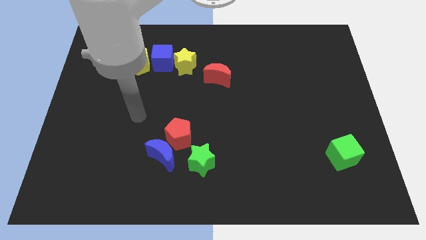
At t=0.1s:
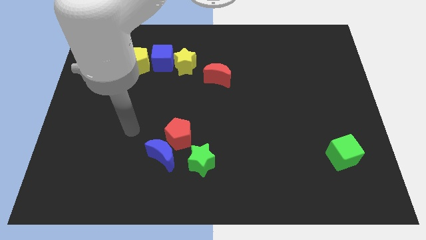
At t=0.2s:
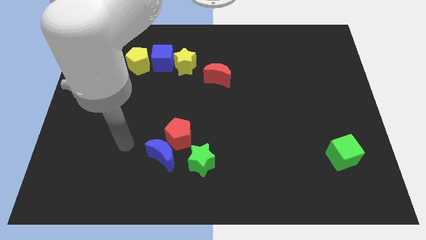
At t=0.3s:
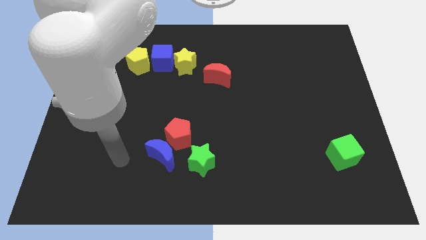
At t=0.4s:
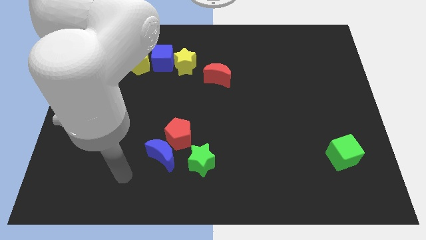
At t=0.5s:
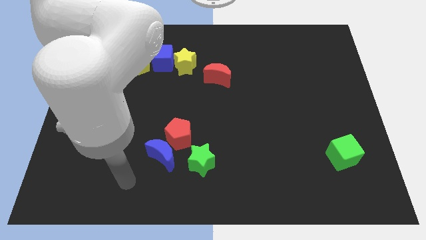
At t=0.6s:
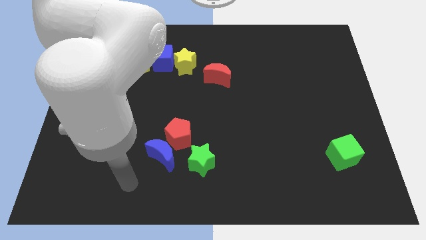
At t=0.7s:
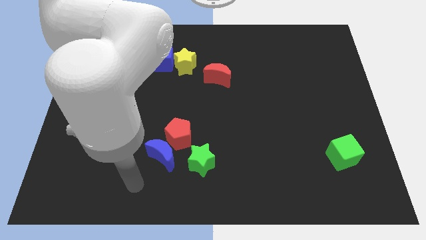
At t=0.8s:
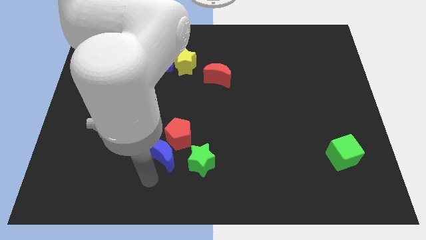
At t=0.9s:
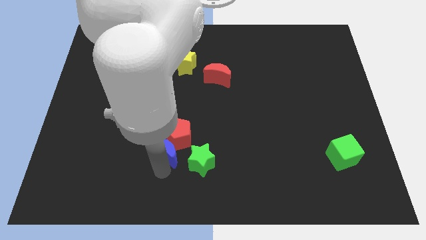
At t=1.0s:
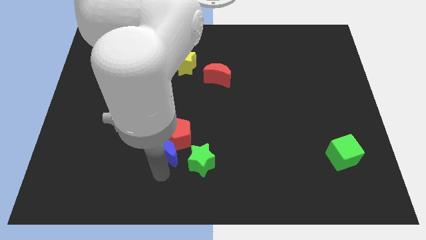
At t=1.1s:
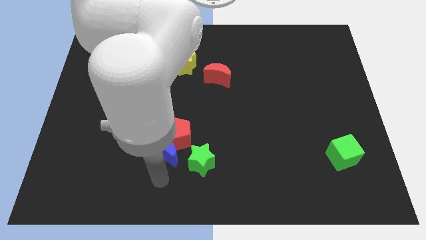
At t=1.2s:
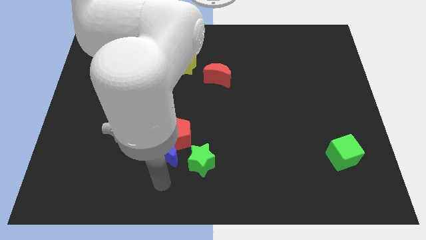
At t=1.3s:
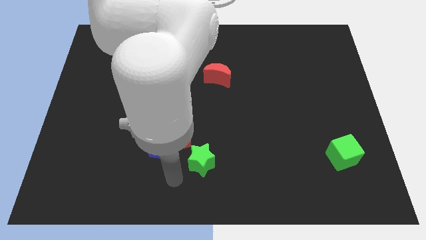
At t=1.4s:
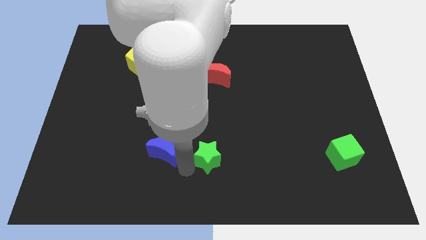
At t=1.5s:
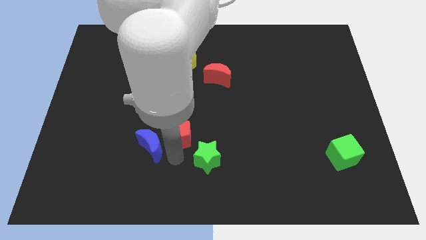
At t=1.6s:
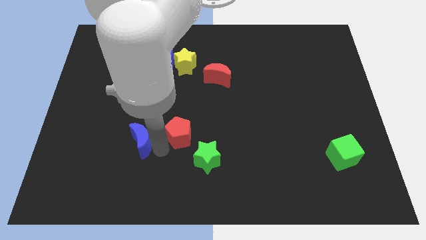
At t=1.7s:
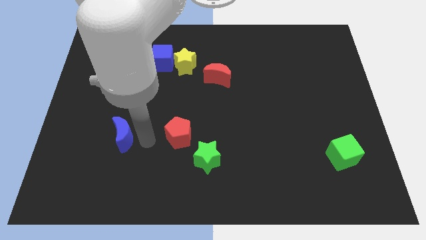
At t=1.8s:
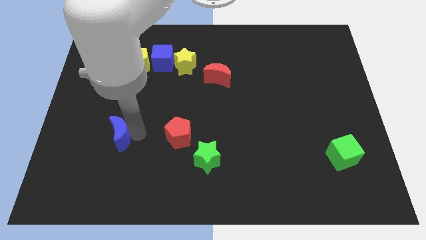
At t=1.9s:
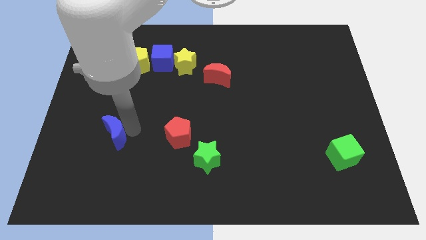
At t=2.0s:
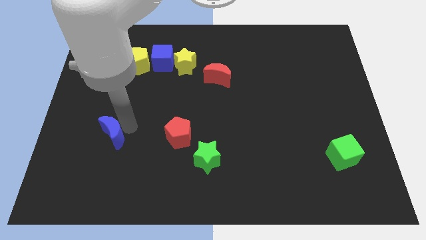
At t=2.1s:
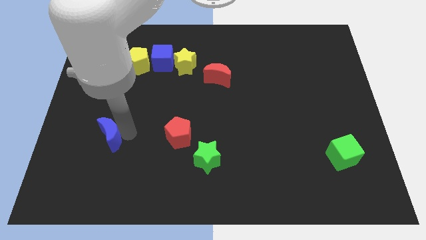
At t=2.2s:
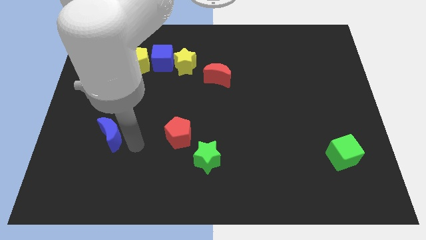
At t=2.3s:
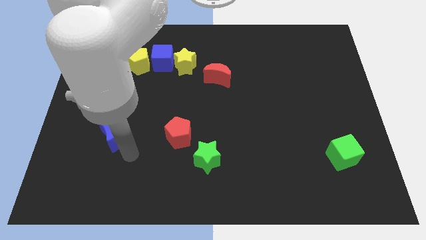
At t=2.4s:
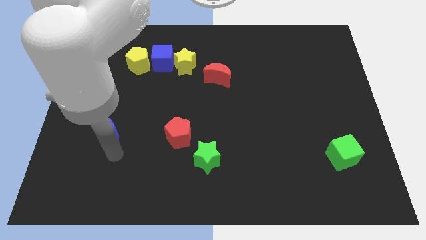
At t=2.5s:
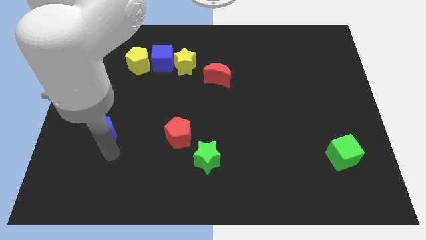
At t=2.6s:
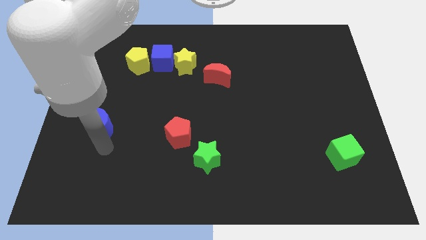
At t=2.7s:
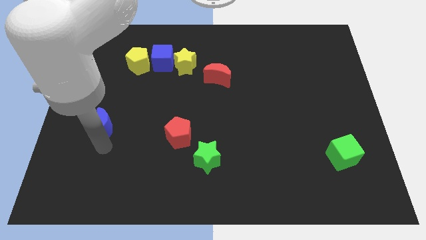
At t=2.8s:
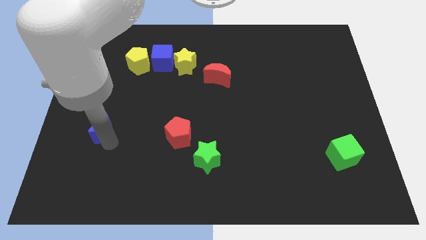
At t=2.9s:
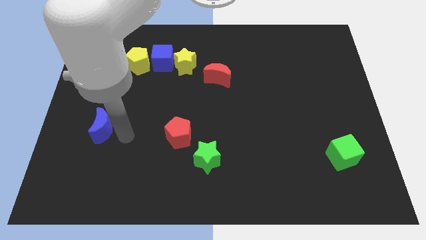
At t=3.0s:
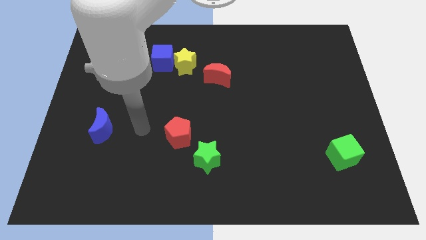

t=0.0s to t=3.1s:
separate blue moon from red pentagon

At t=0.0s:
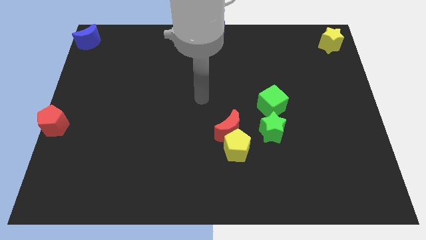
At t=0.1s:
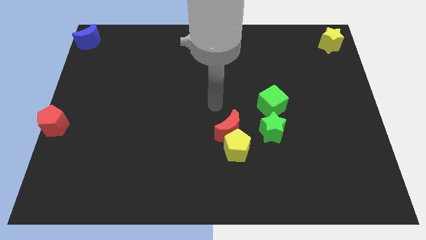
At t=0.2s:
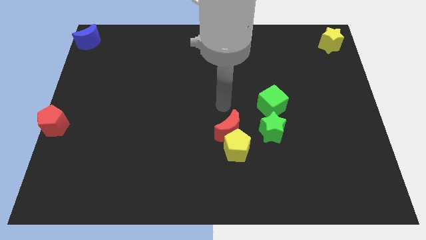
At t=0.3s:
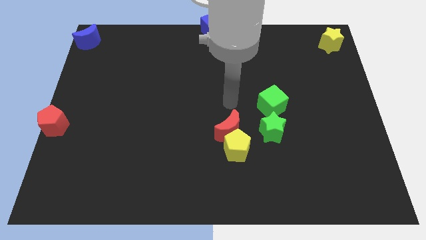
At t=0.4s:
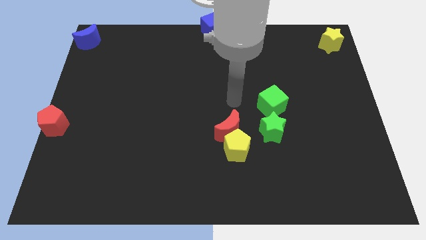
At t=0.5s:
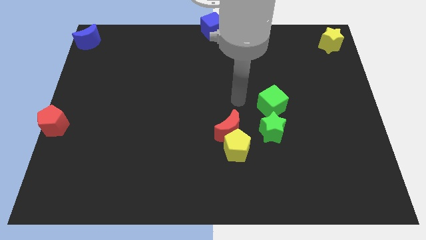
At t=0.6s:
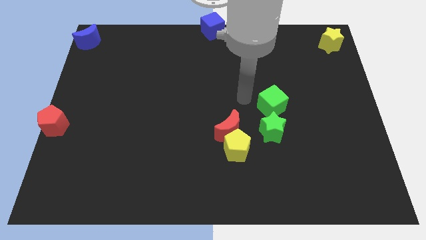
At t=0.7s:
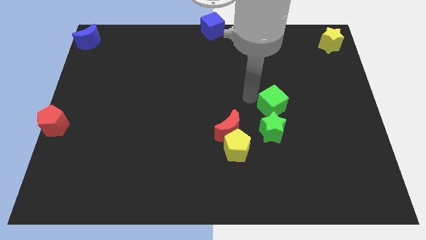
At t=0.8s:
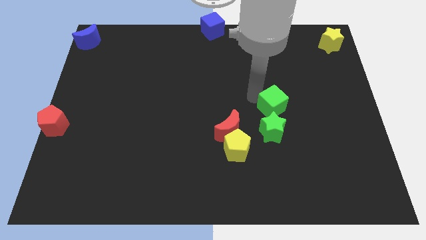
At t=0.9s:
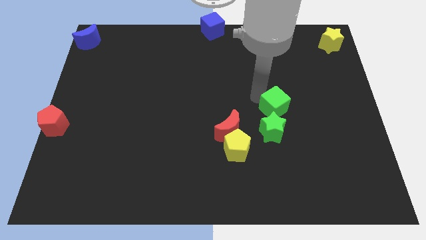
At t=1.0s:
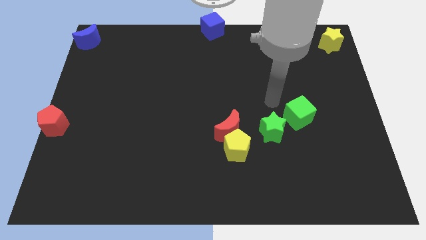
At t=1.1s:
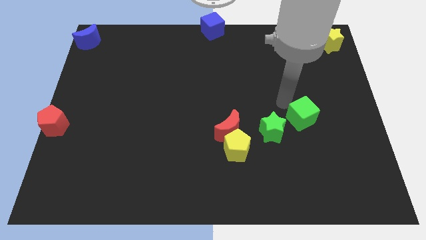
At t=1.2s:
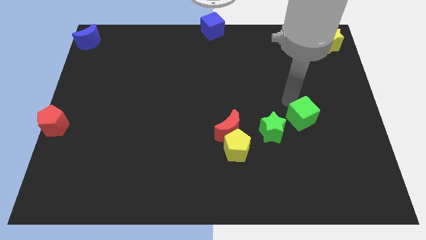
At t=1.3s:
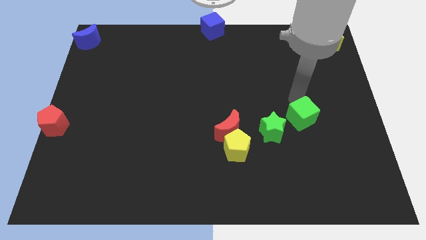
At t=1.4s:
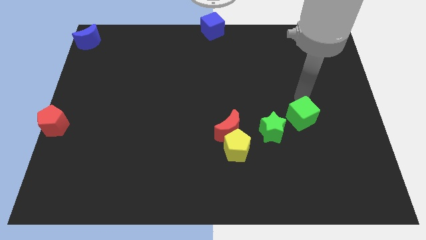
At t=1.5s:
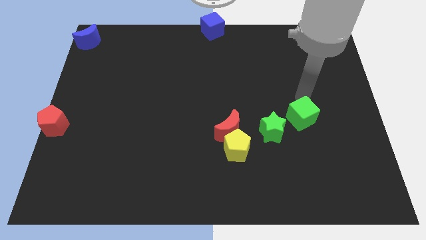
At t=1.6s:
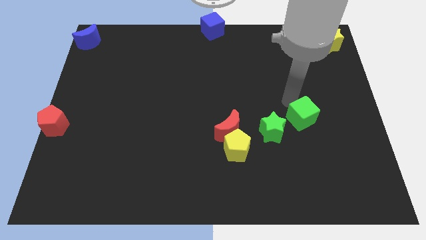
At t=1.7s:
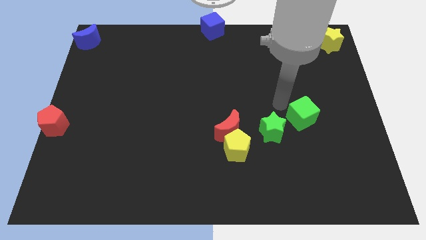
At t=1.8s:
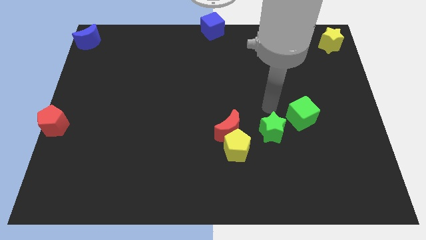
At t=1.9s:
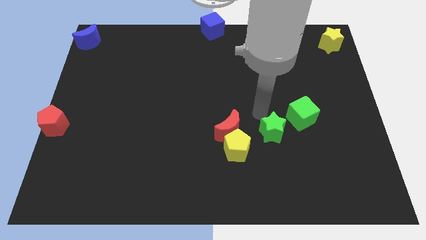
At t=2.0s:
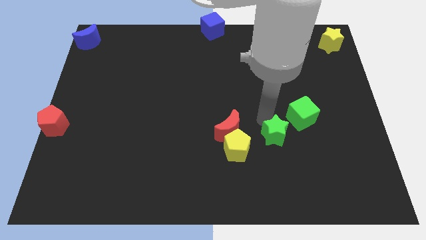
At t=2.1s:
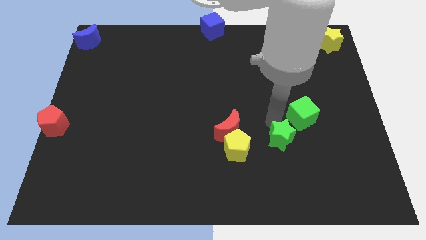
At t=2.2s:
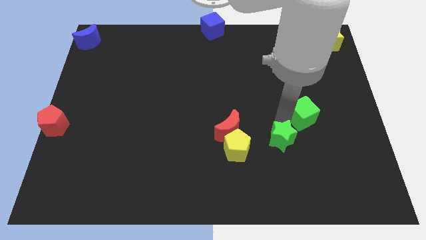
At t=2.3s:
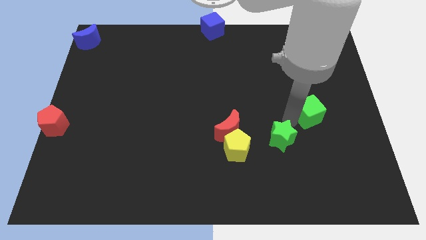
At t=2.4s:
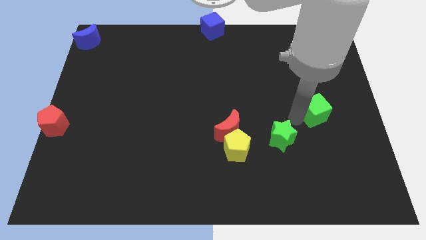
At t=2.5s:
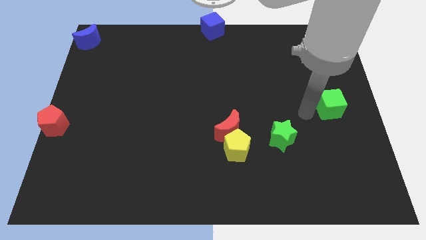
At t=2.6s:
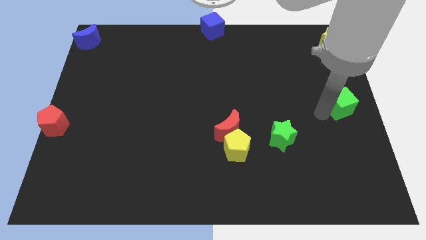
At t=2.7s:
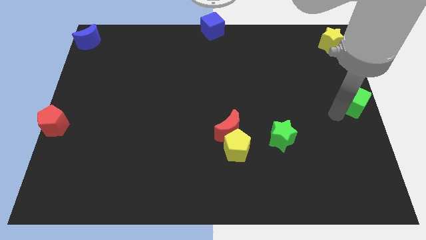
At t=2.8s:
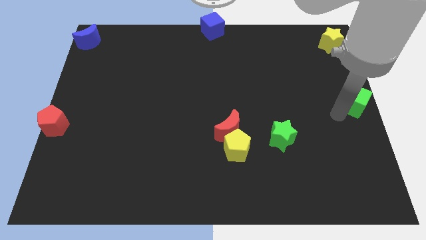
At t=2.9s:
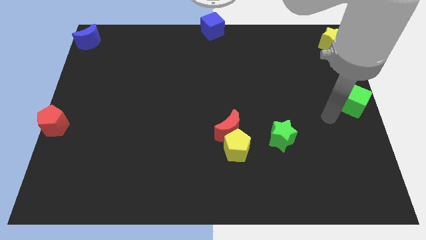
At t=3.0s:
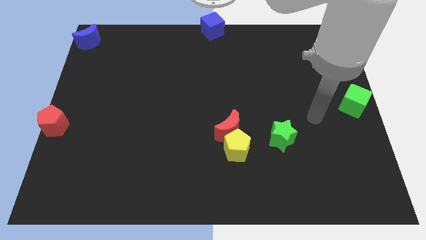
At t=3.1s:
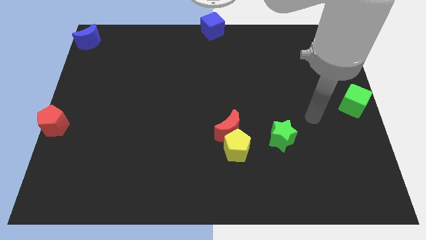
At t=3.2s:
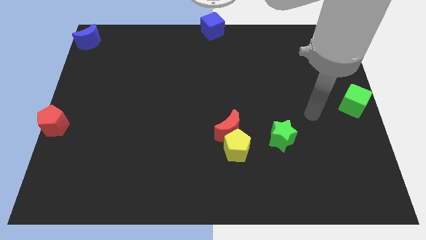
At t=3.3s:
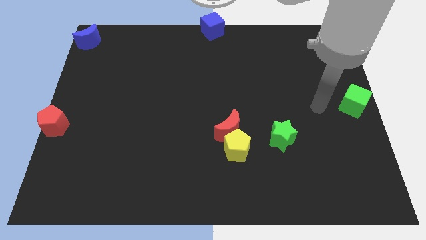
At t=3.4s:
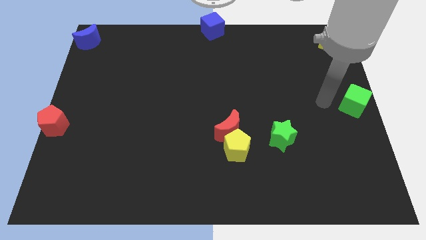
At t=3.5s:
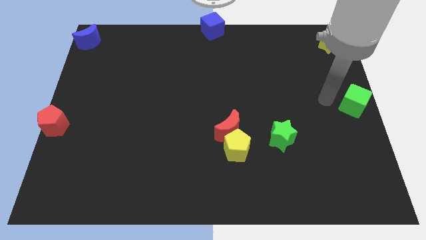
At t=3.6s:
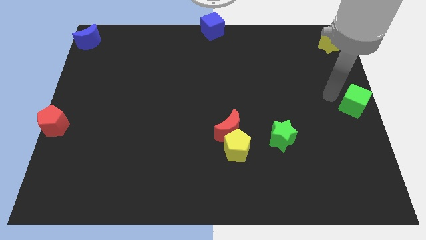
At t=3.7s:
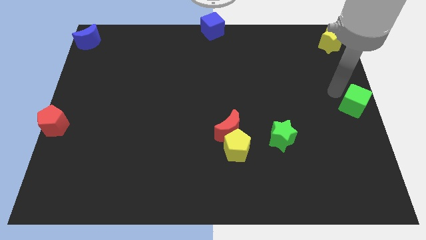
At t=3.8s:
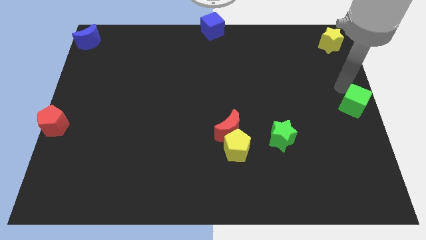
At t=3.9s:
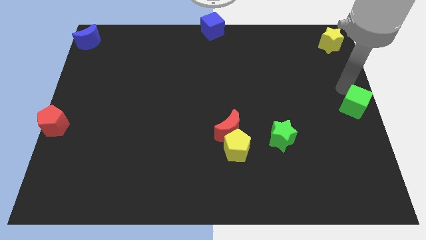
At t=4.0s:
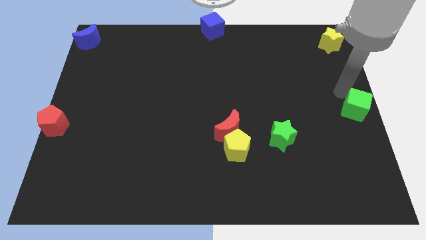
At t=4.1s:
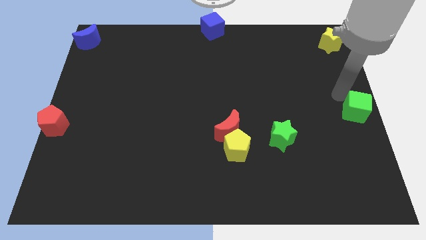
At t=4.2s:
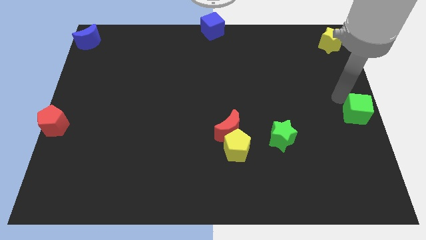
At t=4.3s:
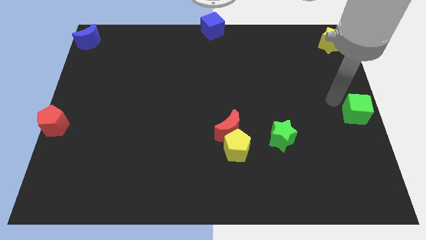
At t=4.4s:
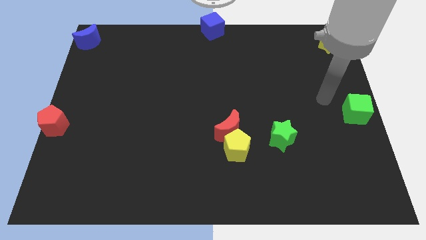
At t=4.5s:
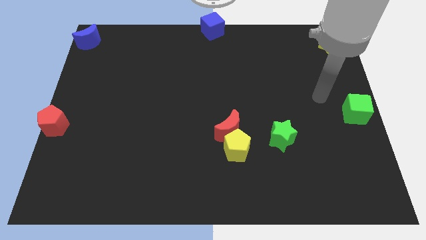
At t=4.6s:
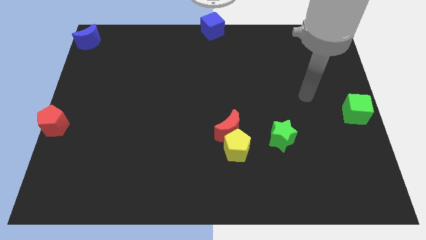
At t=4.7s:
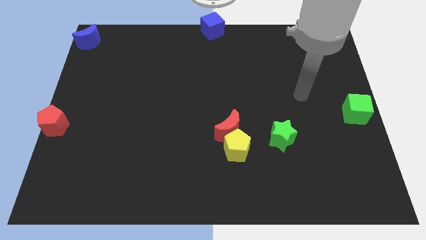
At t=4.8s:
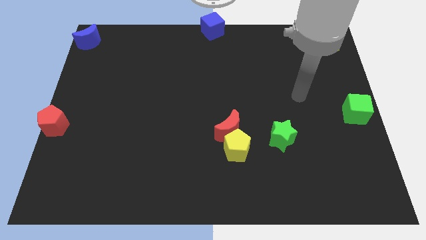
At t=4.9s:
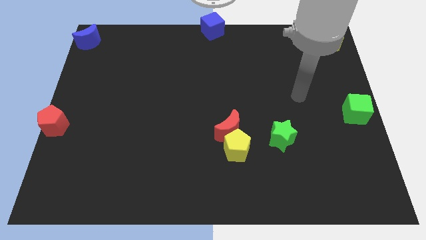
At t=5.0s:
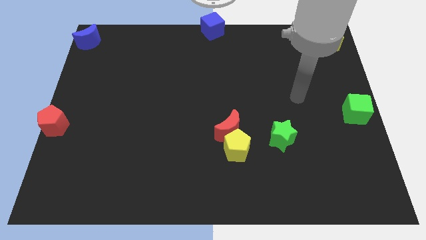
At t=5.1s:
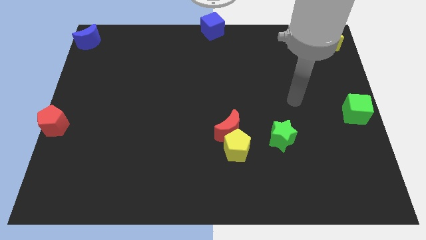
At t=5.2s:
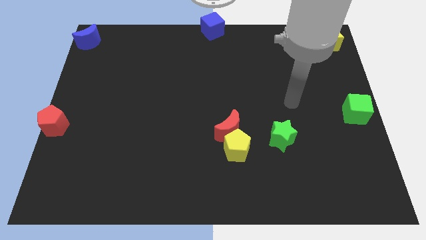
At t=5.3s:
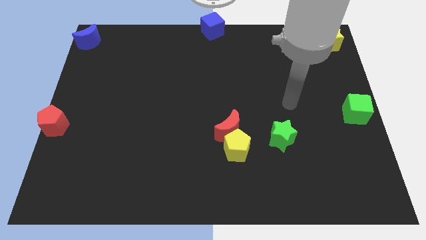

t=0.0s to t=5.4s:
place the green cube at the center right side of the table

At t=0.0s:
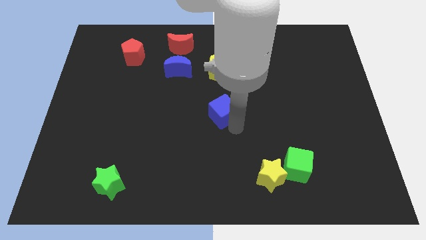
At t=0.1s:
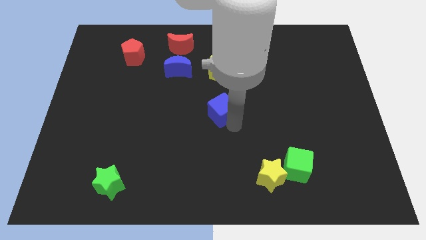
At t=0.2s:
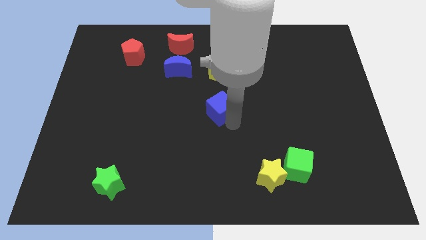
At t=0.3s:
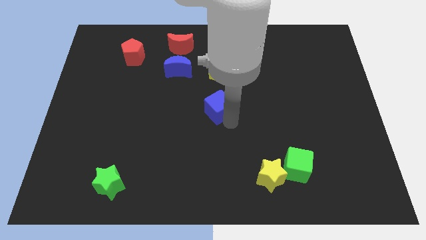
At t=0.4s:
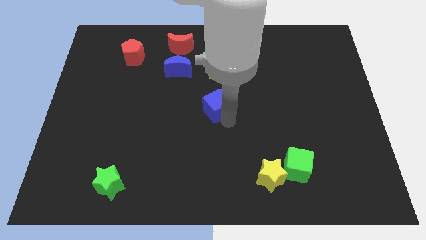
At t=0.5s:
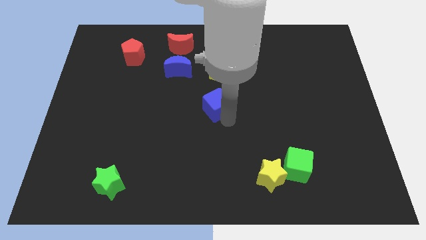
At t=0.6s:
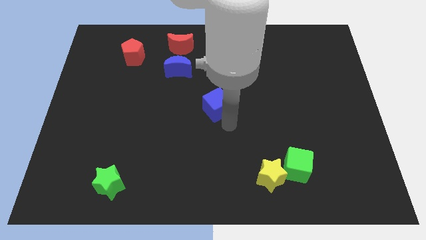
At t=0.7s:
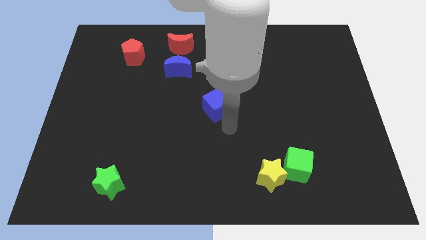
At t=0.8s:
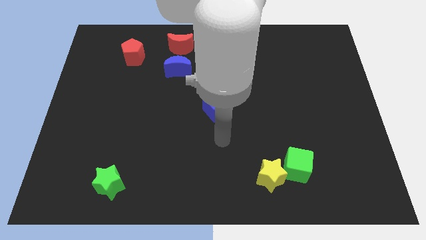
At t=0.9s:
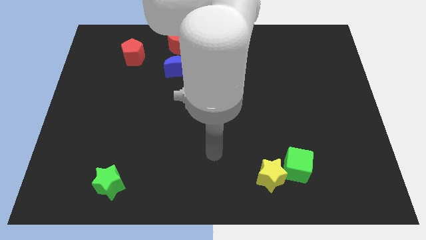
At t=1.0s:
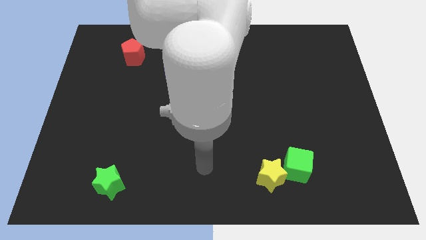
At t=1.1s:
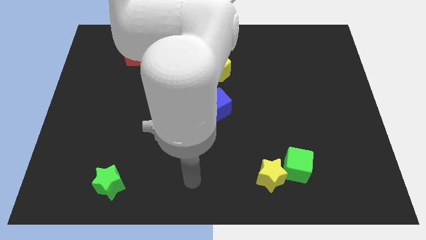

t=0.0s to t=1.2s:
move the blue cube below the yellow pentagon
